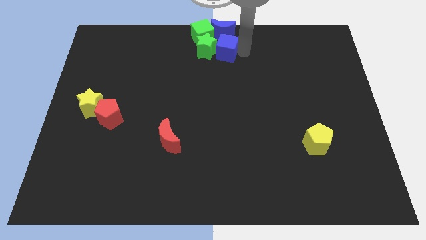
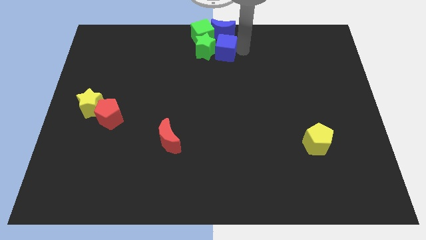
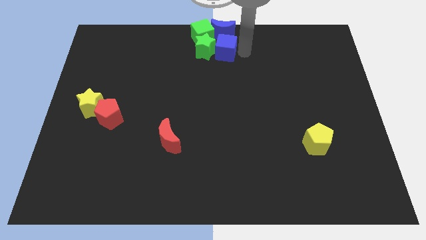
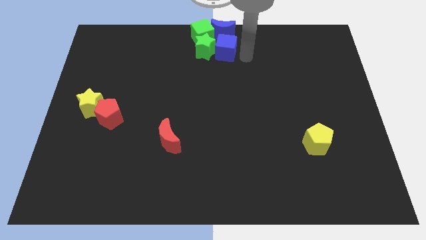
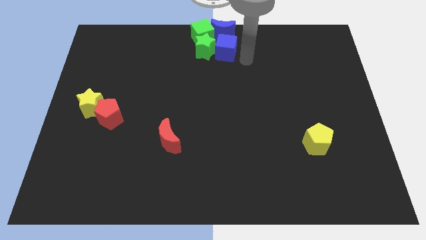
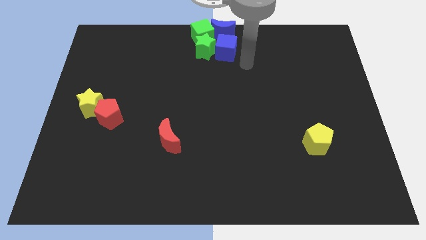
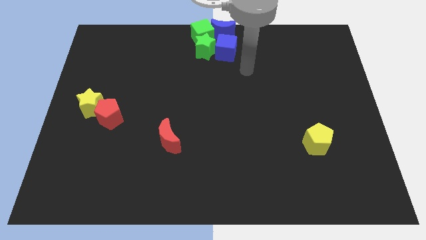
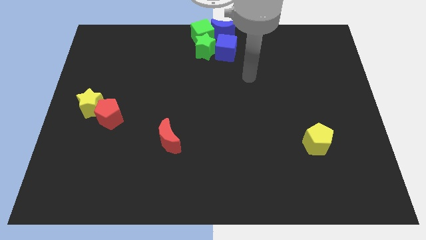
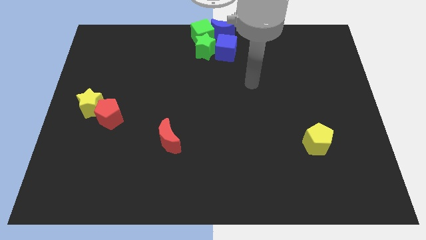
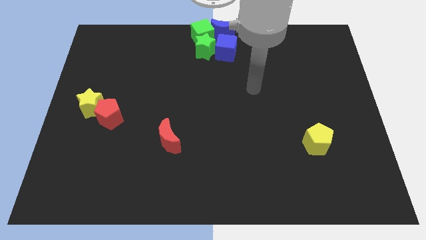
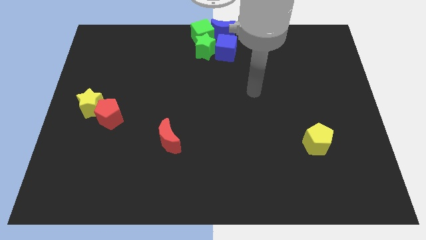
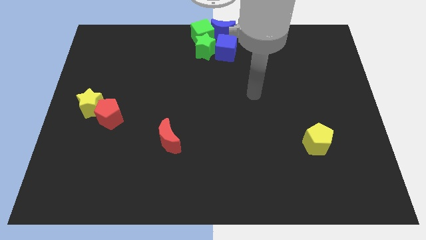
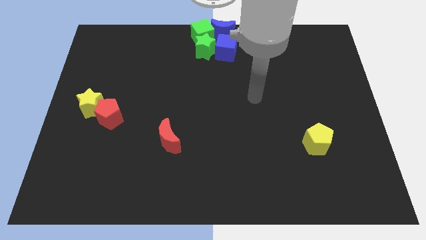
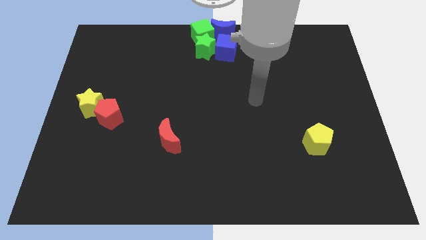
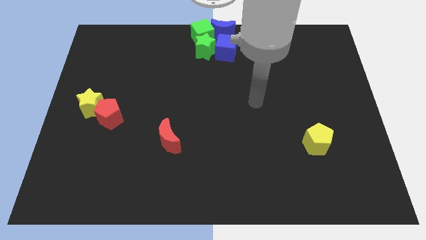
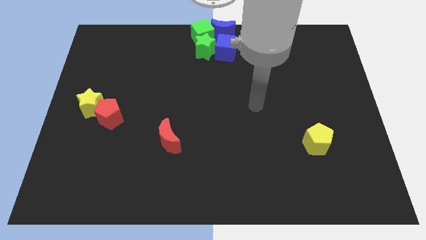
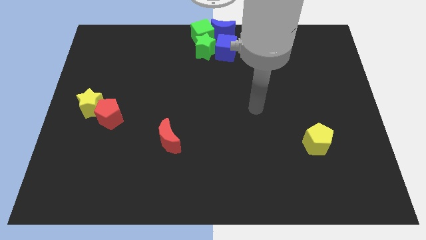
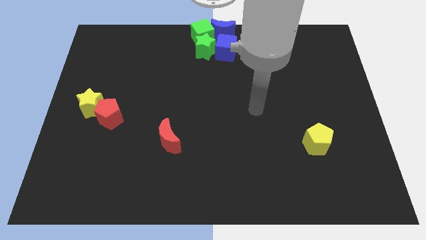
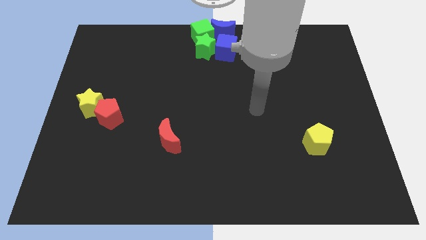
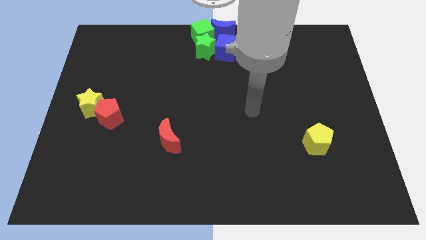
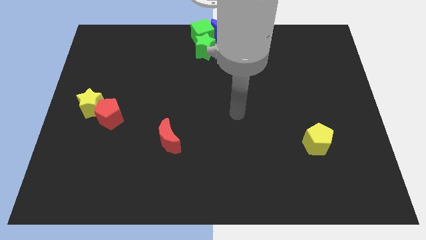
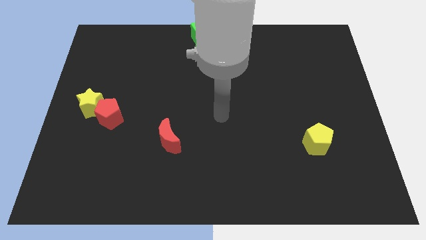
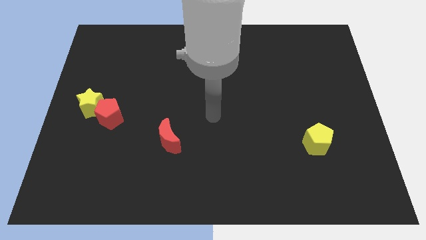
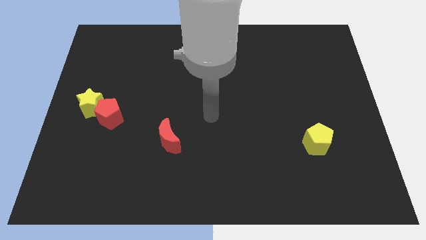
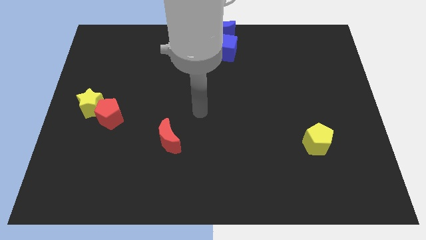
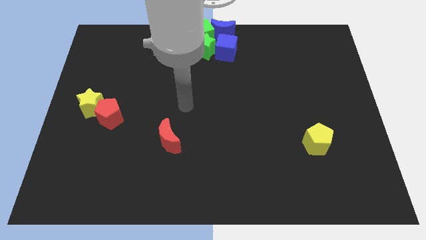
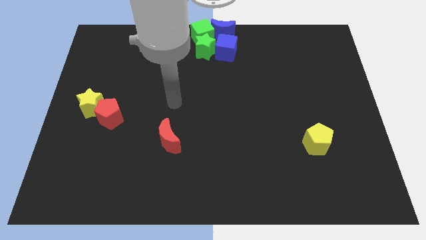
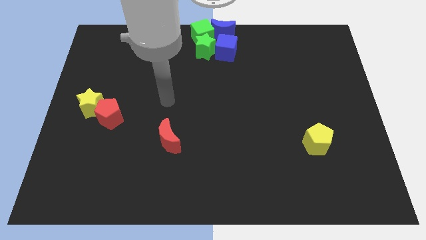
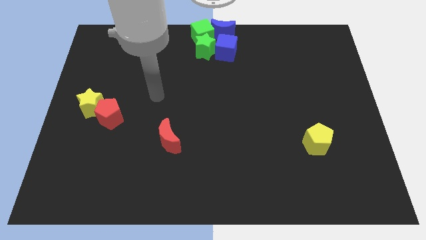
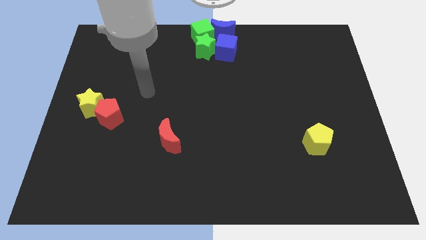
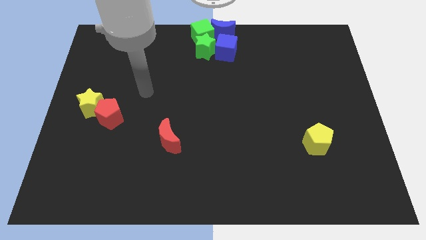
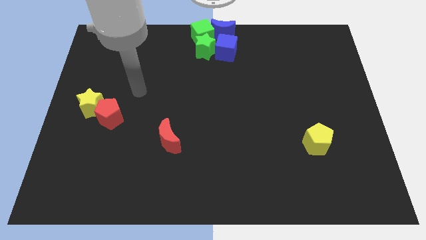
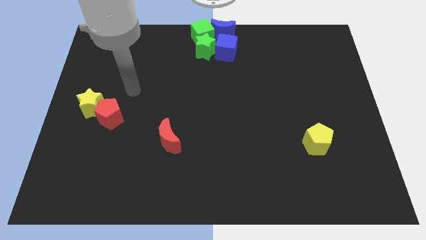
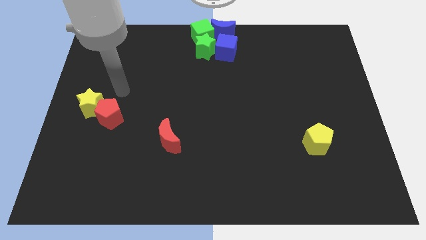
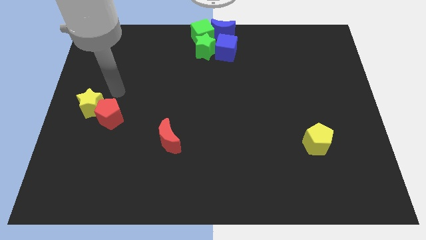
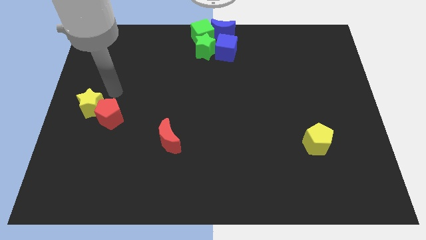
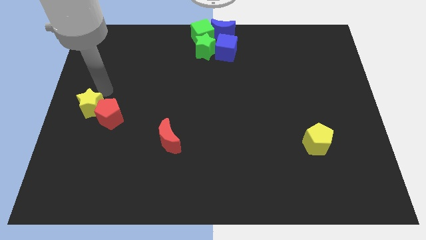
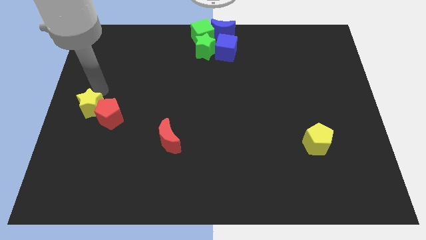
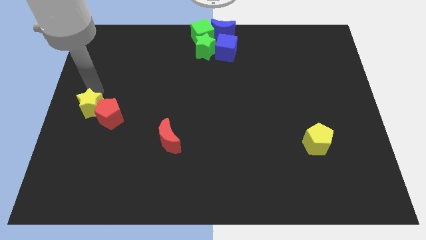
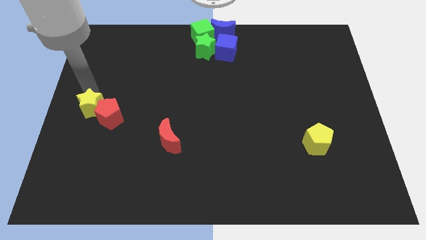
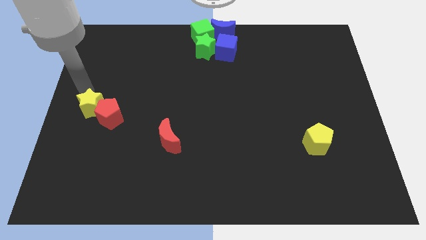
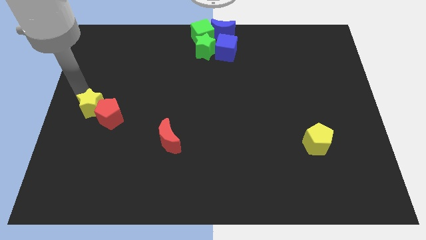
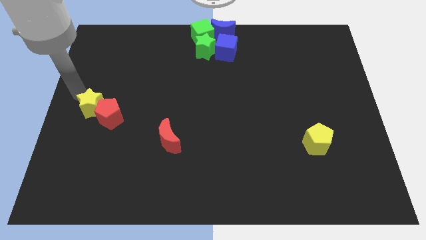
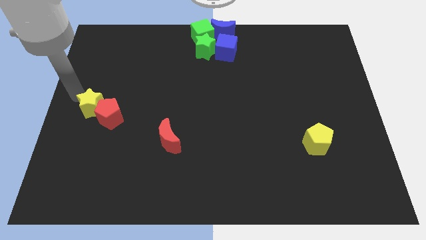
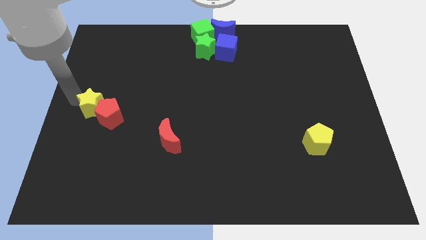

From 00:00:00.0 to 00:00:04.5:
move the arm towards the left center of the board

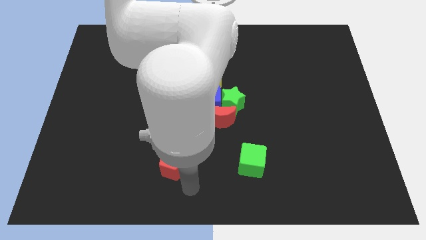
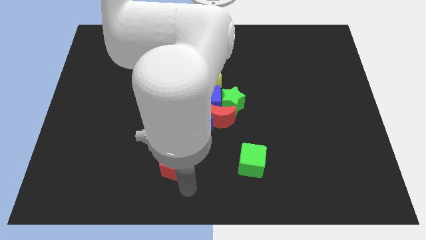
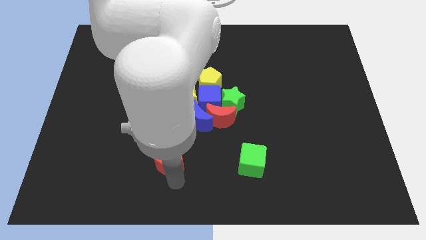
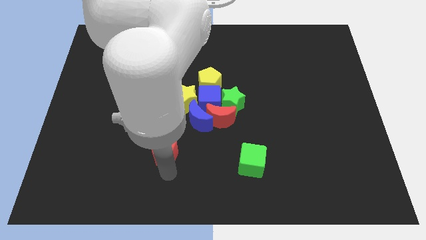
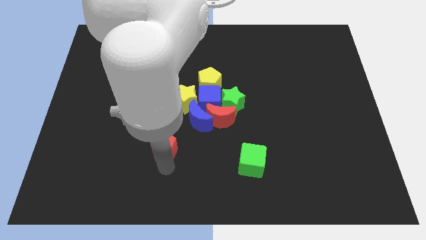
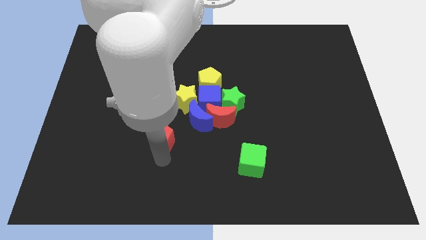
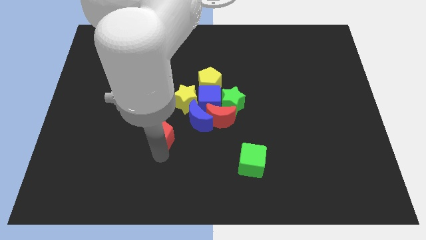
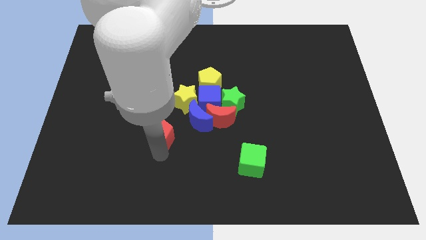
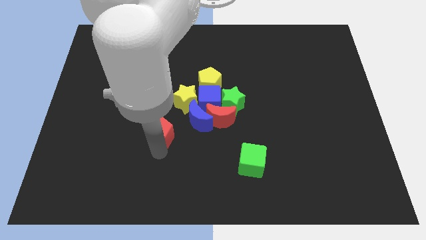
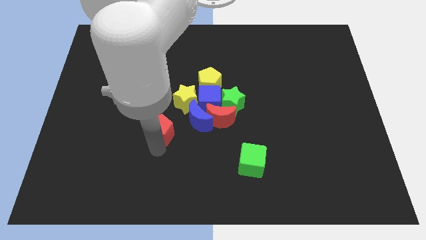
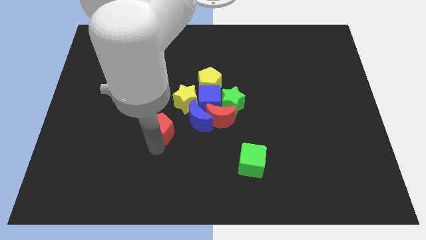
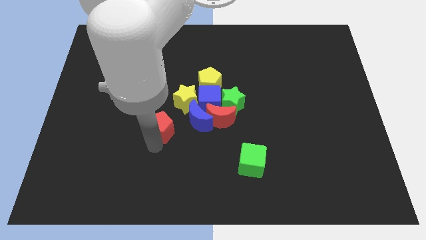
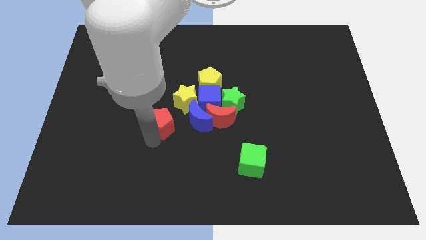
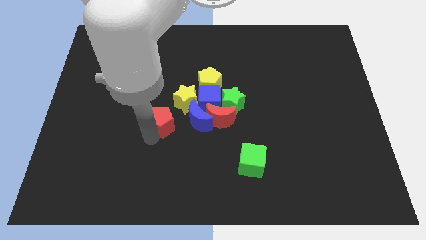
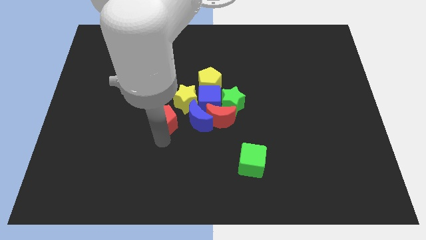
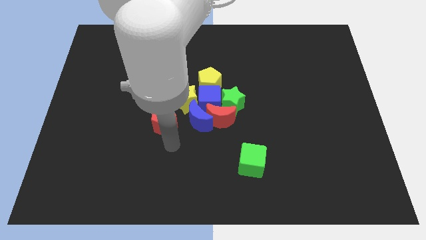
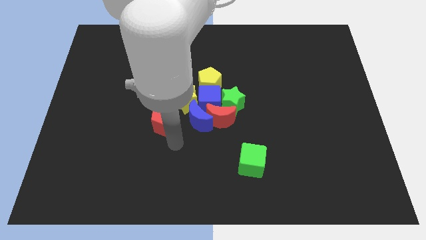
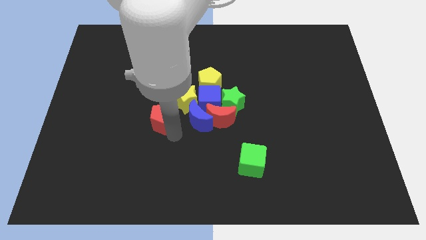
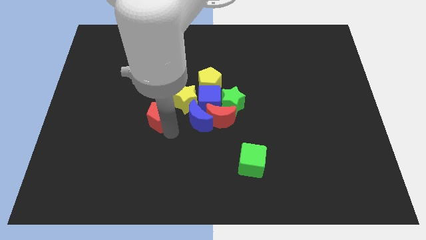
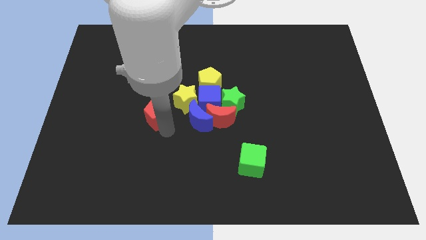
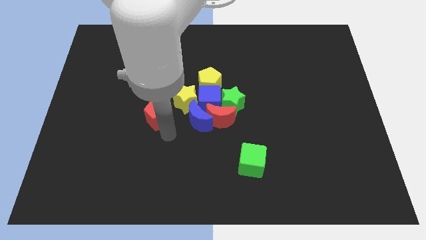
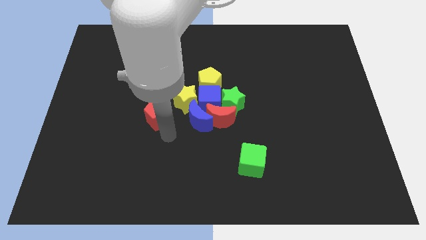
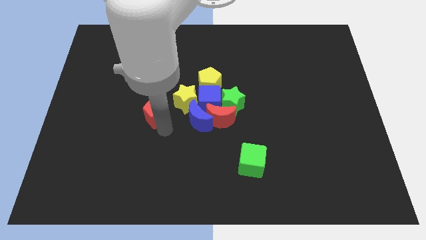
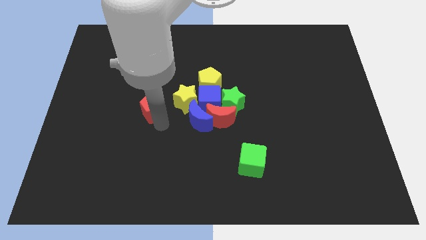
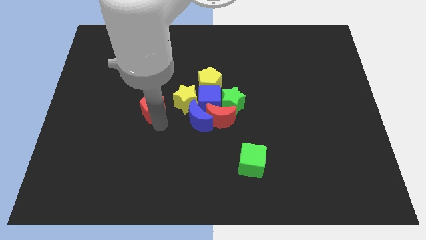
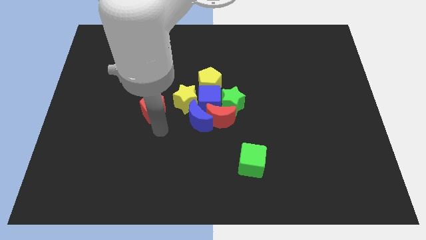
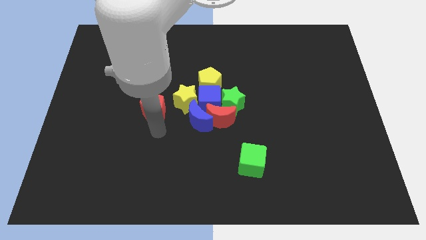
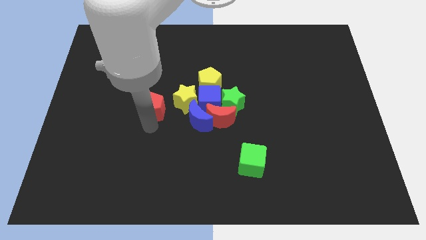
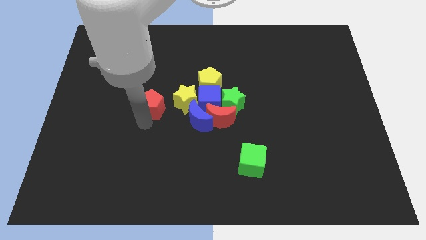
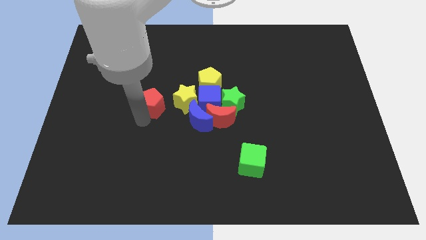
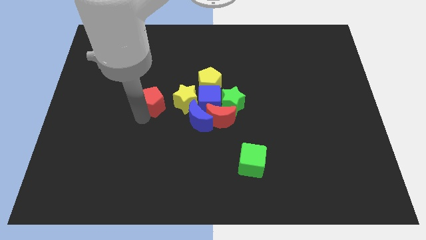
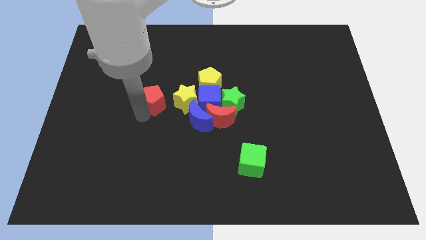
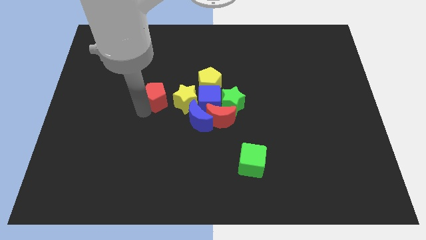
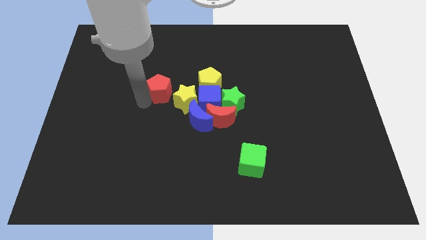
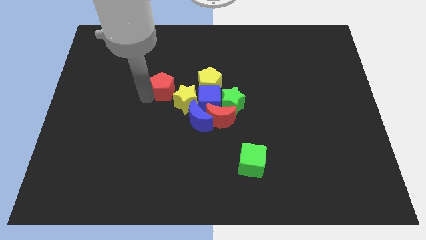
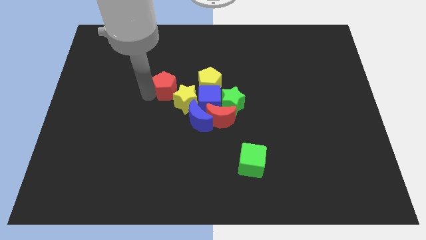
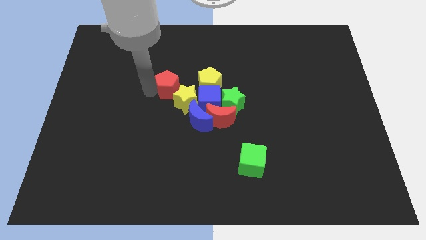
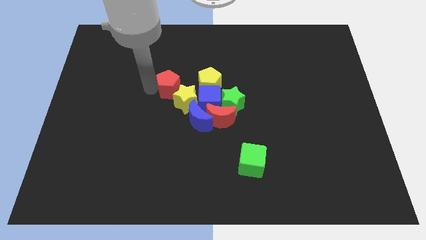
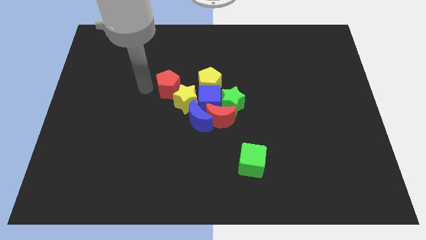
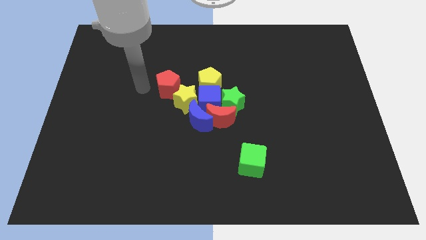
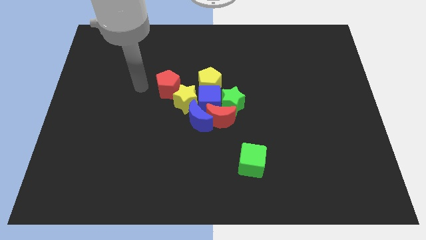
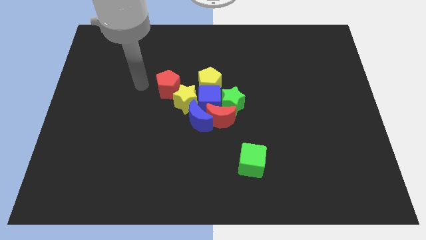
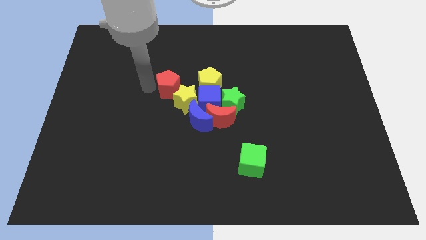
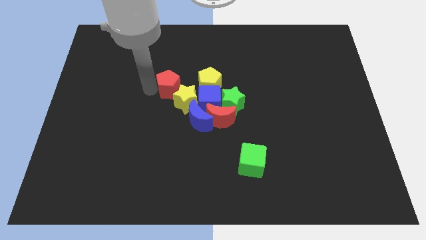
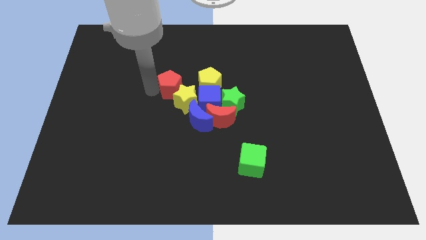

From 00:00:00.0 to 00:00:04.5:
push the red pentagon to the top left side of the yellow star

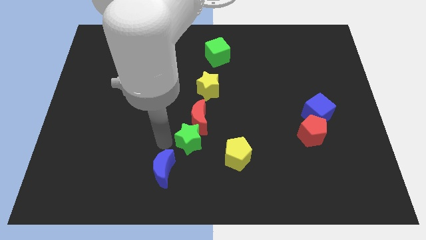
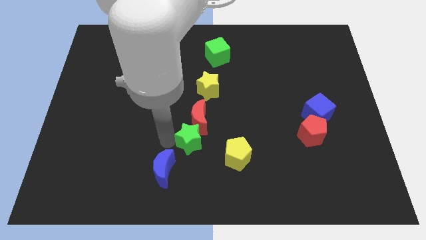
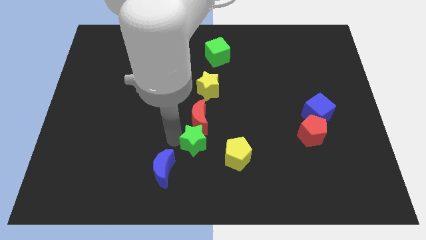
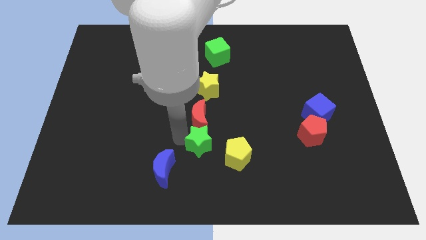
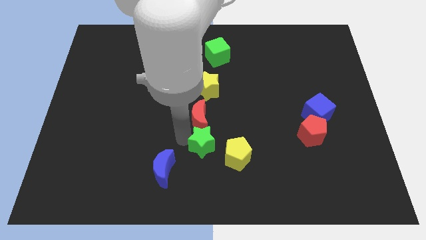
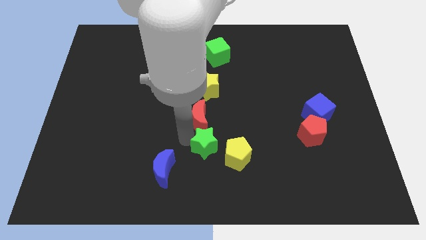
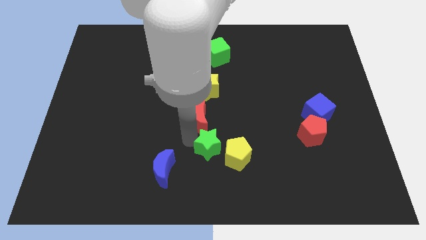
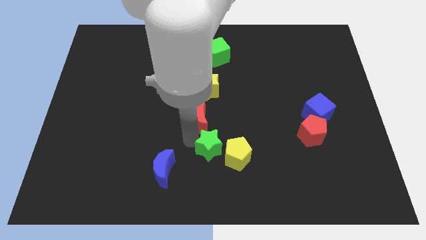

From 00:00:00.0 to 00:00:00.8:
adjust the green star to the bottom of the red crescent vertically
